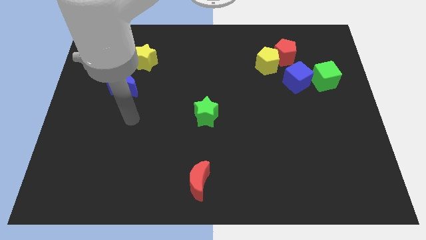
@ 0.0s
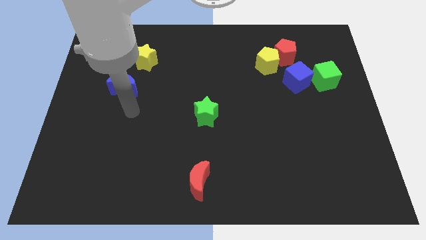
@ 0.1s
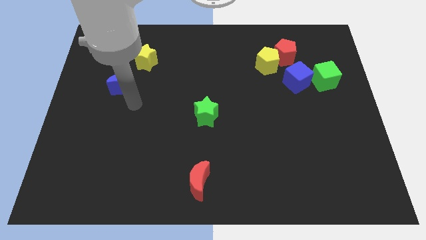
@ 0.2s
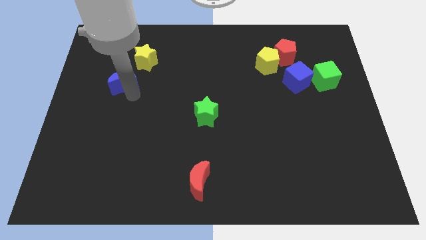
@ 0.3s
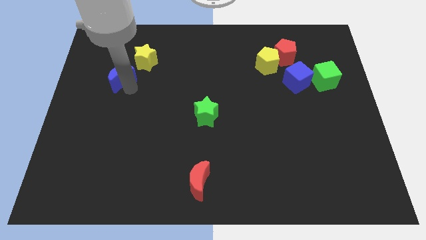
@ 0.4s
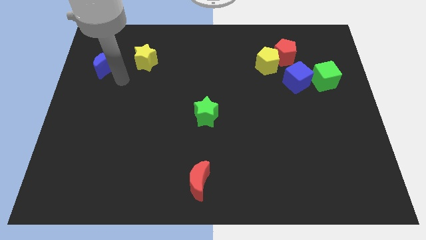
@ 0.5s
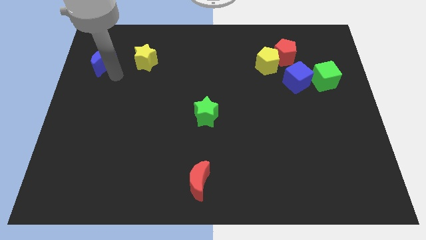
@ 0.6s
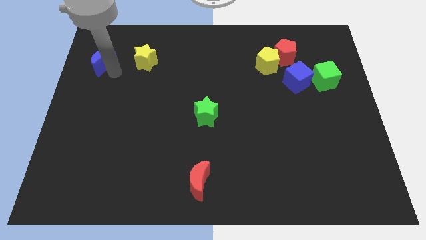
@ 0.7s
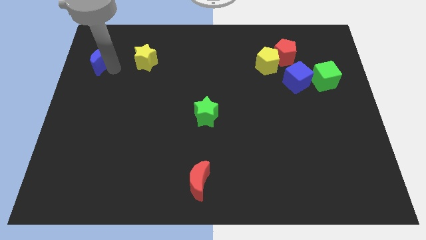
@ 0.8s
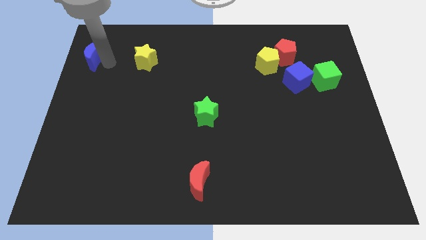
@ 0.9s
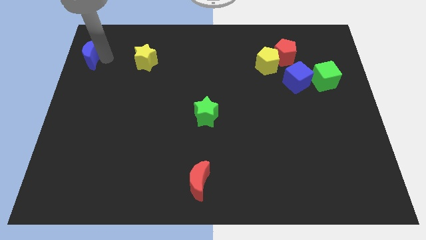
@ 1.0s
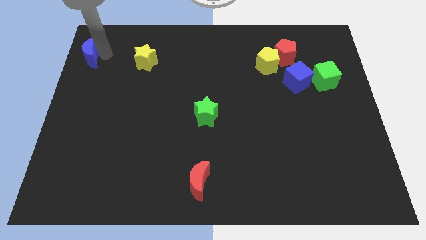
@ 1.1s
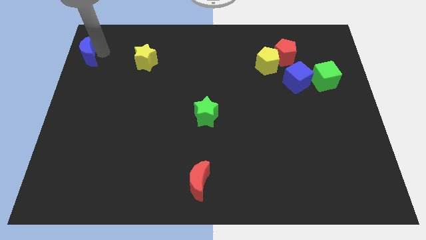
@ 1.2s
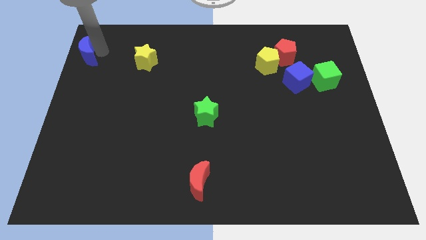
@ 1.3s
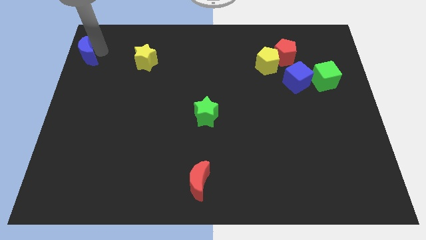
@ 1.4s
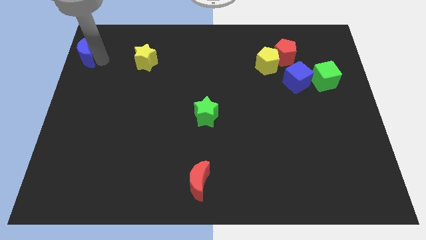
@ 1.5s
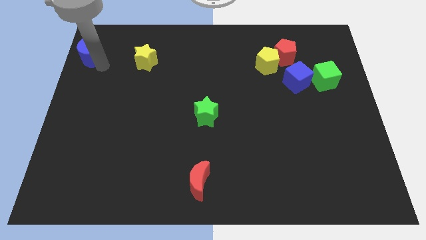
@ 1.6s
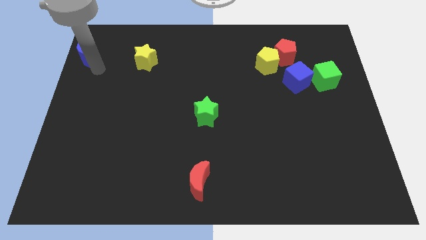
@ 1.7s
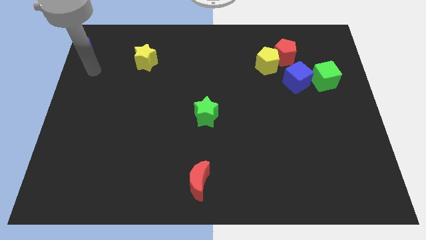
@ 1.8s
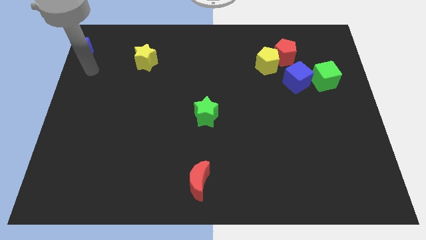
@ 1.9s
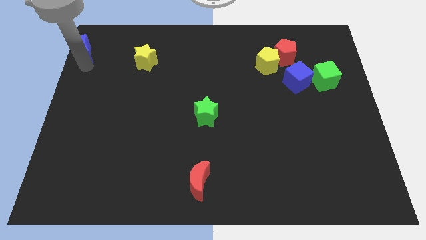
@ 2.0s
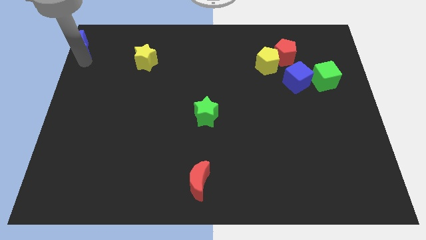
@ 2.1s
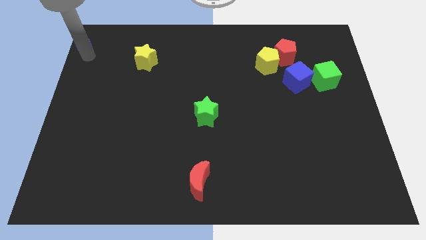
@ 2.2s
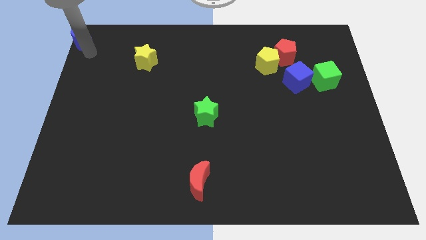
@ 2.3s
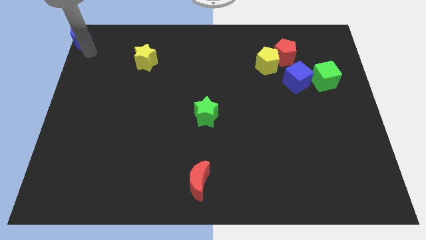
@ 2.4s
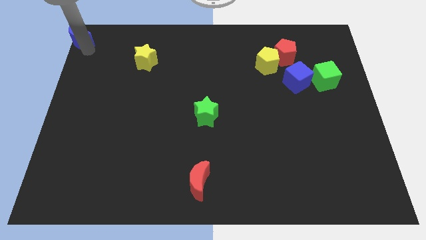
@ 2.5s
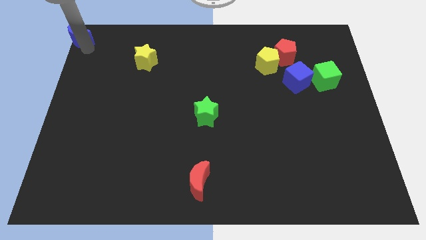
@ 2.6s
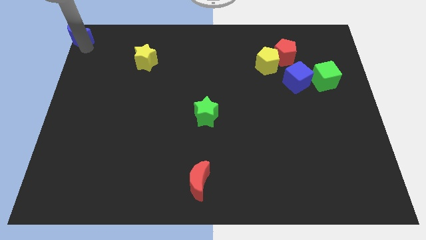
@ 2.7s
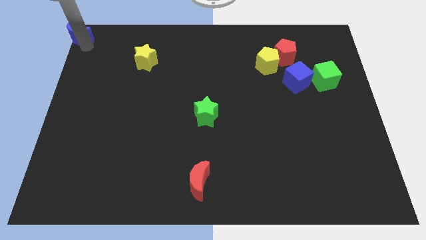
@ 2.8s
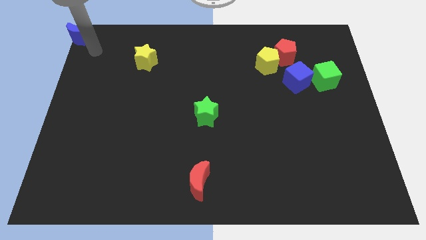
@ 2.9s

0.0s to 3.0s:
move the blue moon to the top left corner

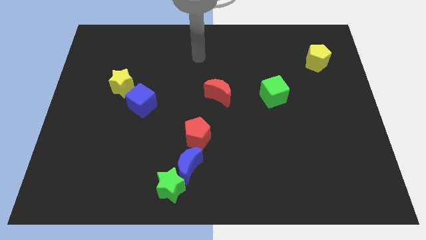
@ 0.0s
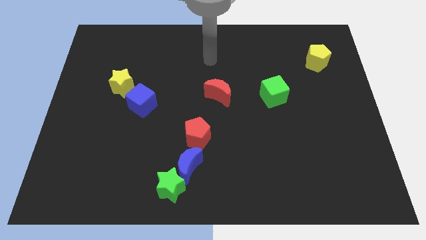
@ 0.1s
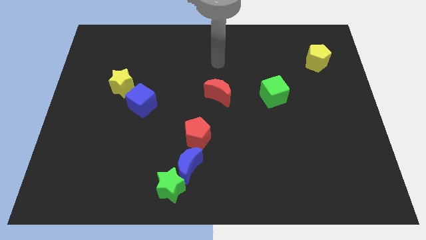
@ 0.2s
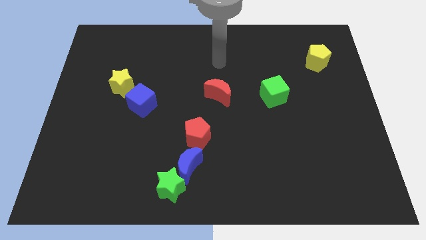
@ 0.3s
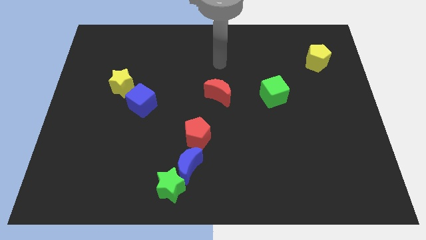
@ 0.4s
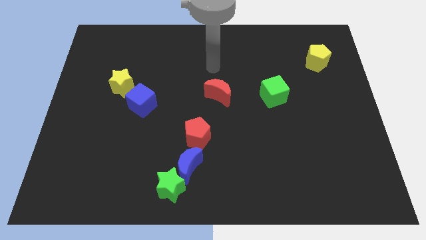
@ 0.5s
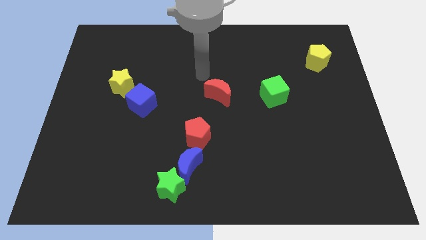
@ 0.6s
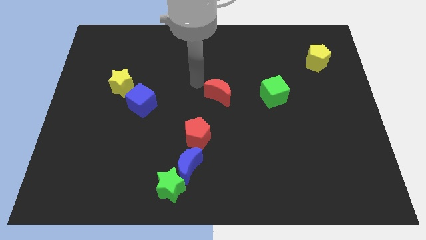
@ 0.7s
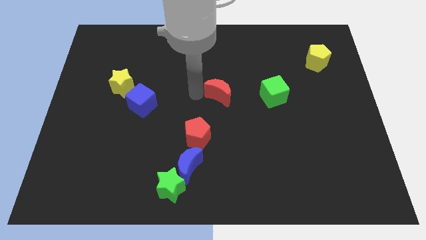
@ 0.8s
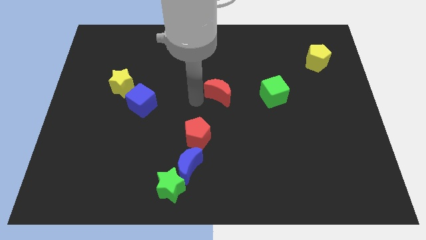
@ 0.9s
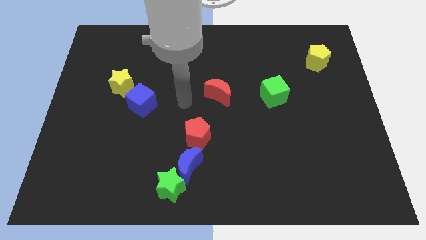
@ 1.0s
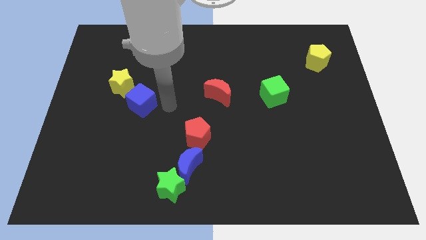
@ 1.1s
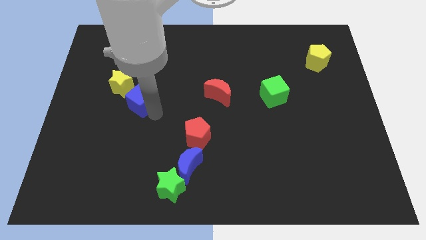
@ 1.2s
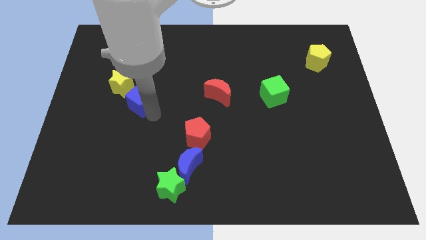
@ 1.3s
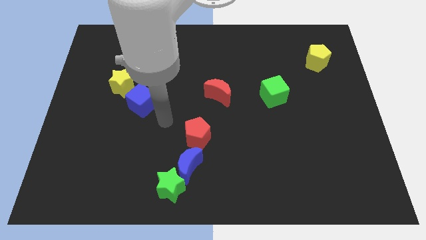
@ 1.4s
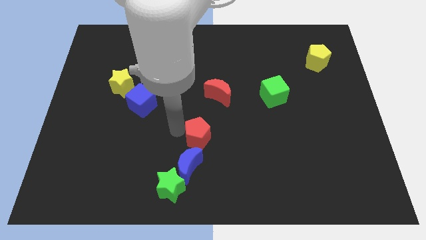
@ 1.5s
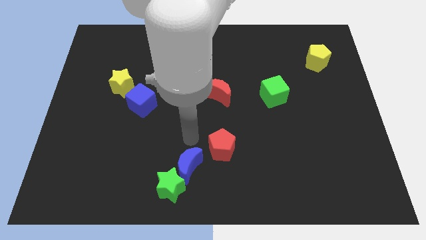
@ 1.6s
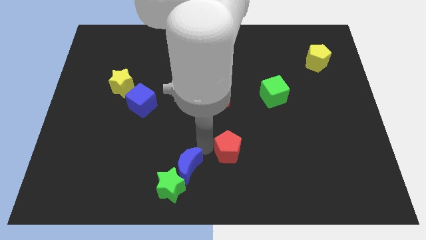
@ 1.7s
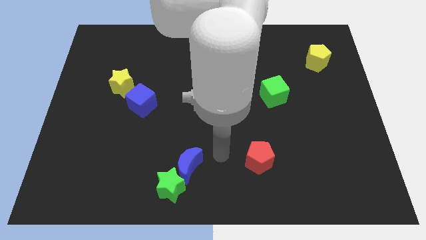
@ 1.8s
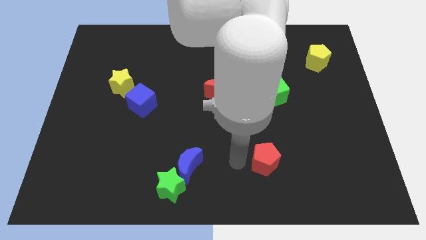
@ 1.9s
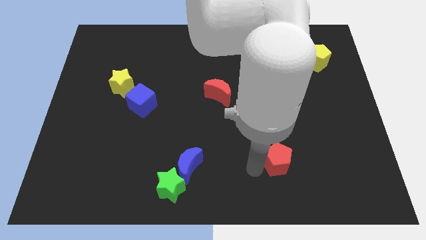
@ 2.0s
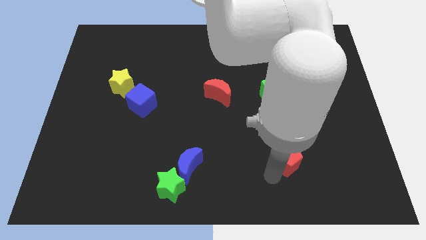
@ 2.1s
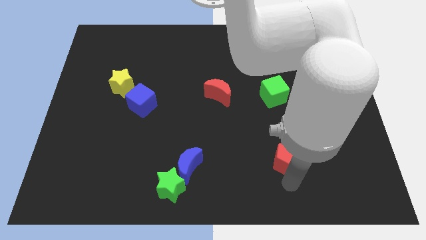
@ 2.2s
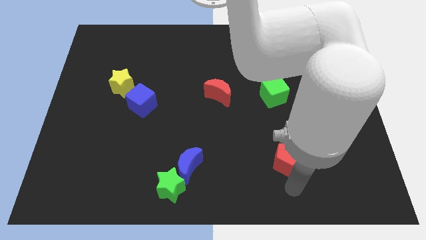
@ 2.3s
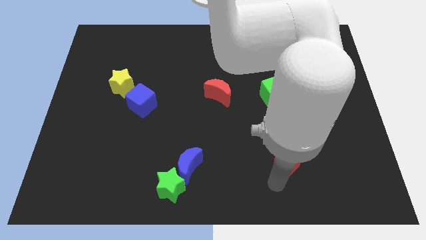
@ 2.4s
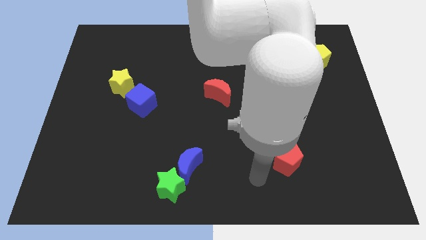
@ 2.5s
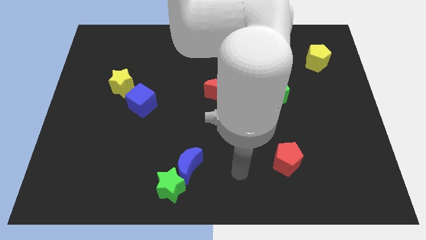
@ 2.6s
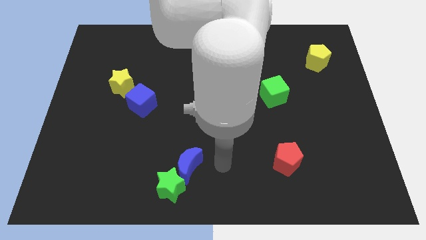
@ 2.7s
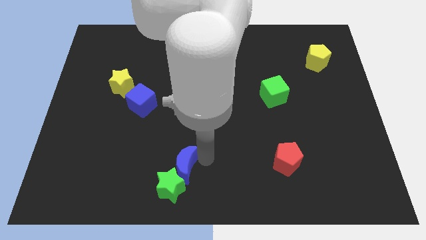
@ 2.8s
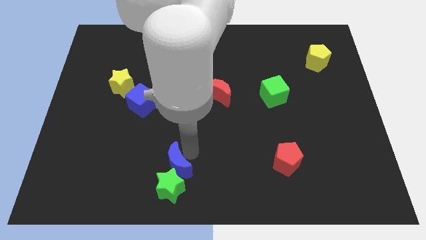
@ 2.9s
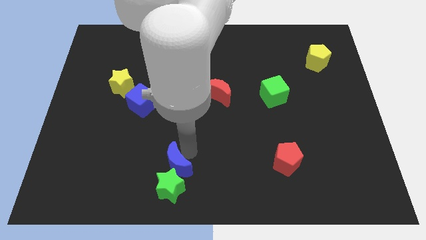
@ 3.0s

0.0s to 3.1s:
move the red pentagon away from the top side of the blue crescent

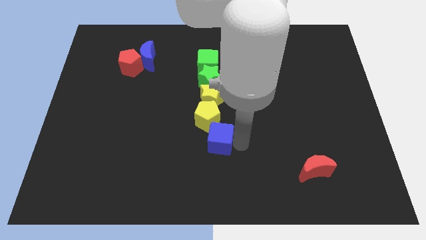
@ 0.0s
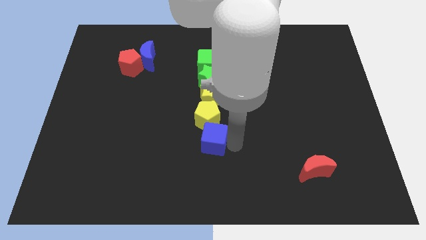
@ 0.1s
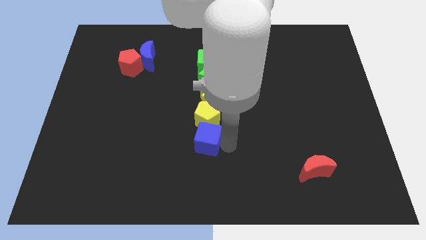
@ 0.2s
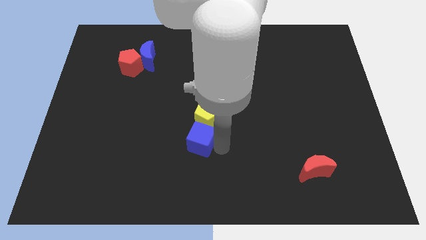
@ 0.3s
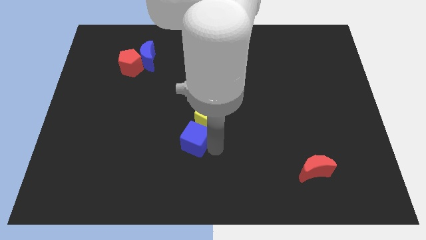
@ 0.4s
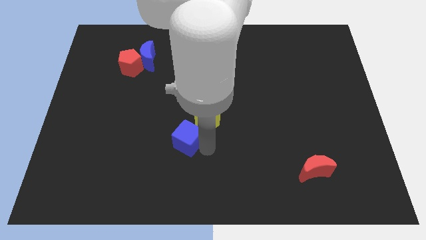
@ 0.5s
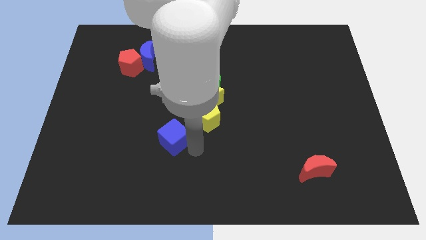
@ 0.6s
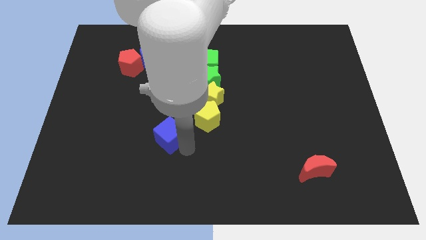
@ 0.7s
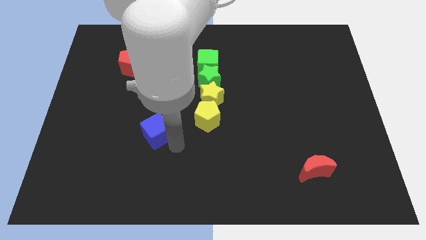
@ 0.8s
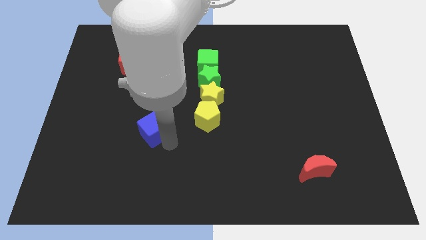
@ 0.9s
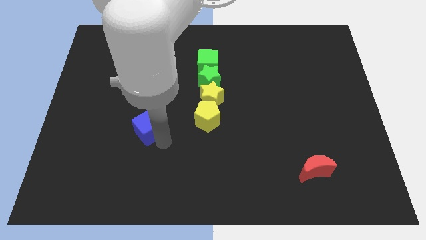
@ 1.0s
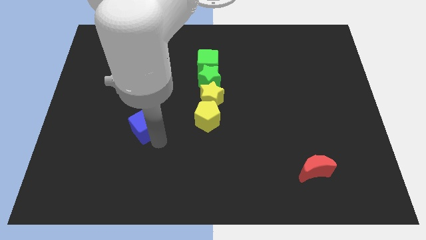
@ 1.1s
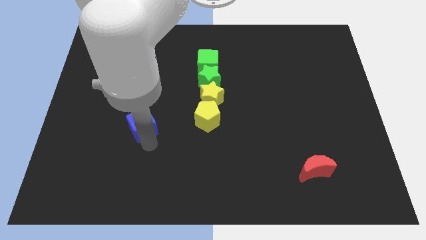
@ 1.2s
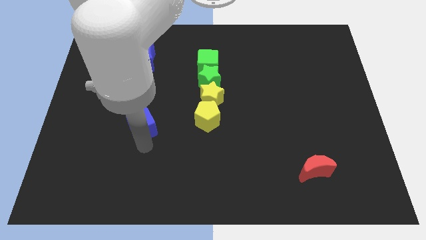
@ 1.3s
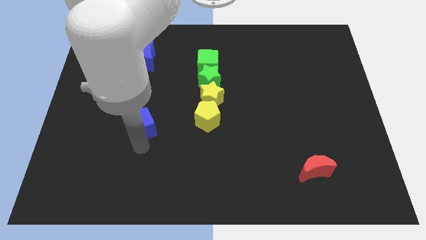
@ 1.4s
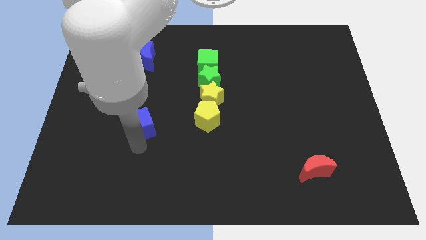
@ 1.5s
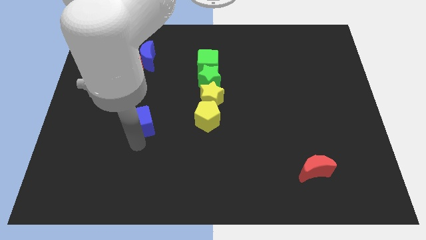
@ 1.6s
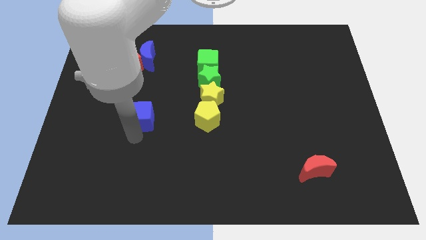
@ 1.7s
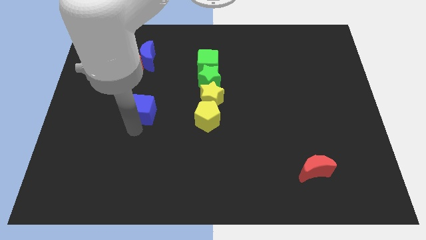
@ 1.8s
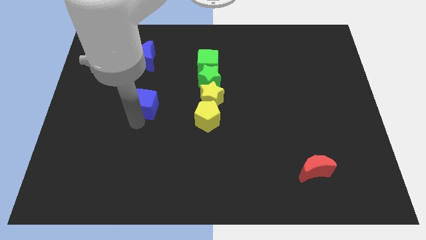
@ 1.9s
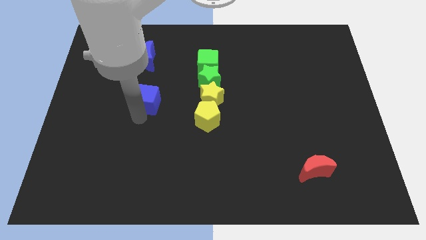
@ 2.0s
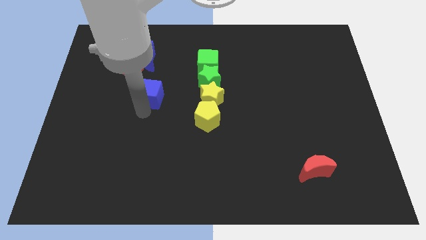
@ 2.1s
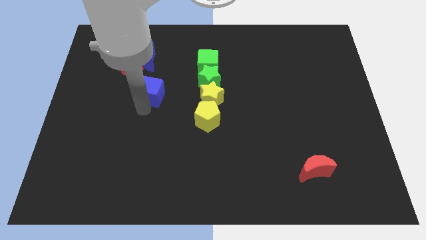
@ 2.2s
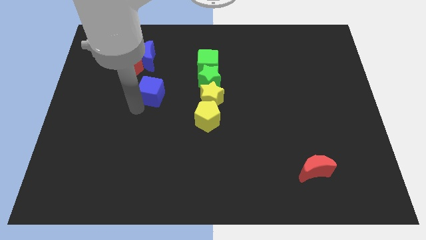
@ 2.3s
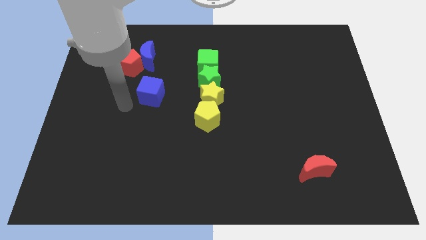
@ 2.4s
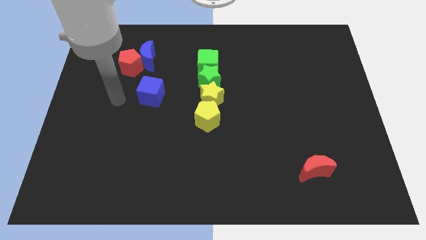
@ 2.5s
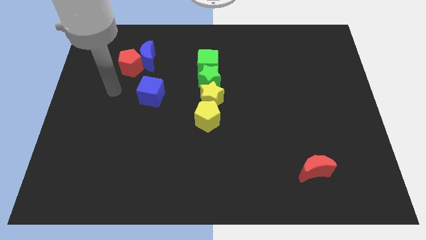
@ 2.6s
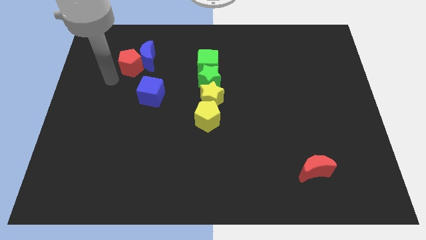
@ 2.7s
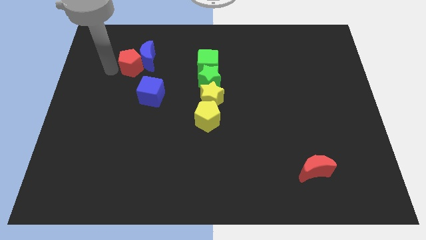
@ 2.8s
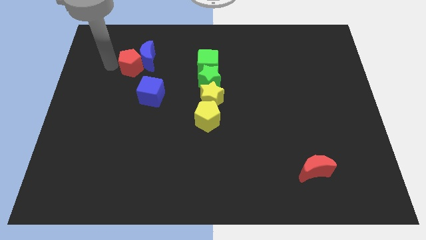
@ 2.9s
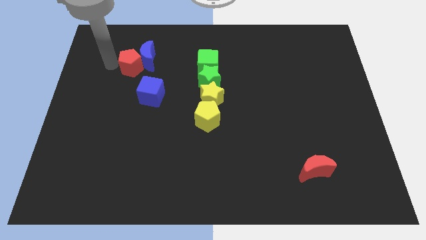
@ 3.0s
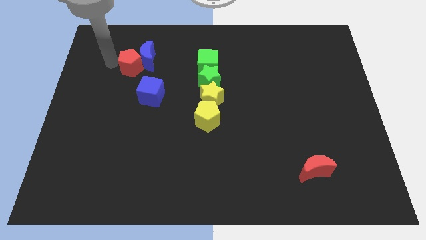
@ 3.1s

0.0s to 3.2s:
place the blue cube vertically below the blue crescent
